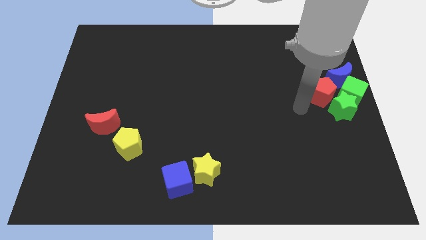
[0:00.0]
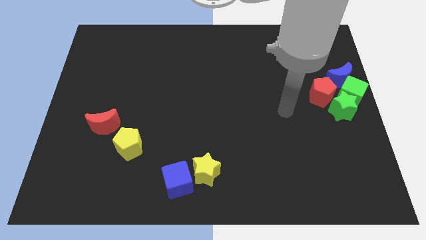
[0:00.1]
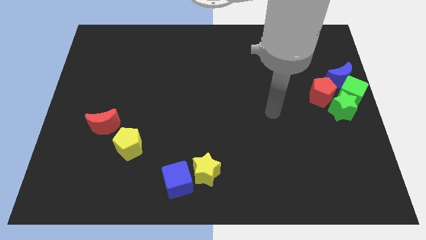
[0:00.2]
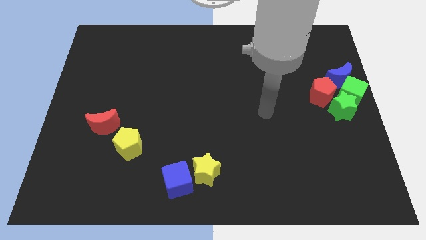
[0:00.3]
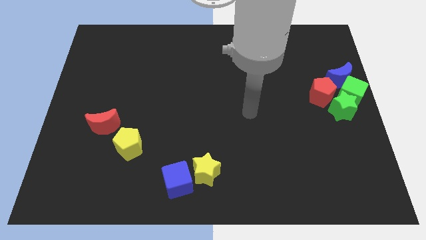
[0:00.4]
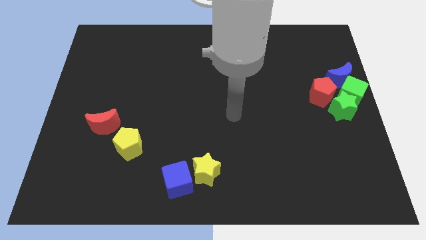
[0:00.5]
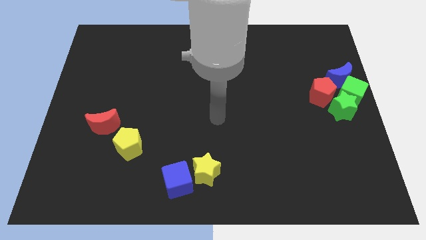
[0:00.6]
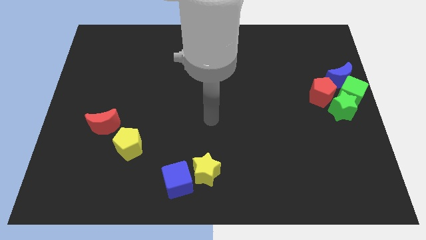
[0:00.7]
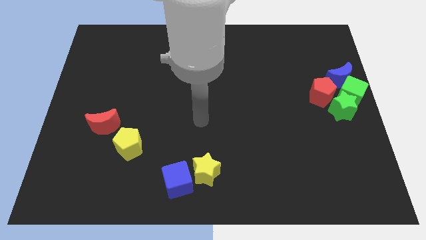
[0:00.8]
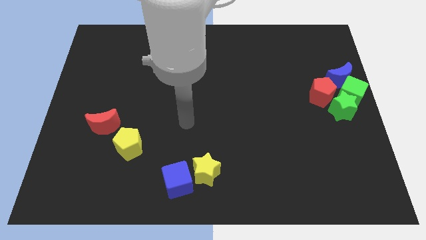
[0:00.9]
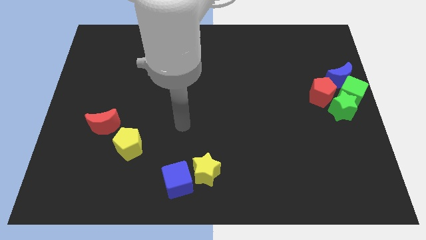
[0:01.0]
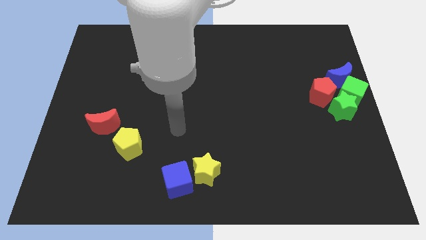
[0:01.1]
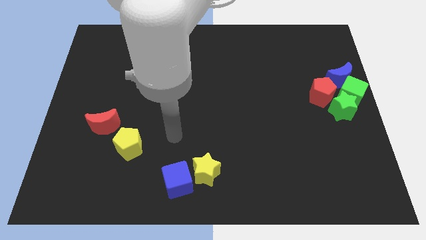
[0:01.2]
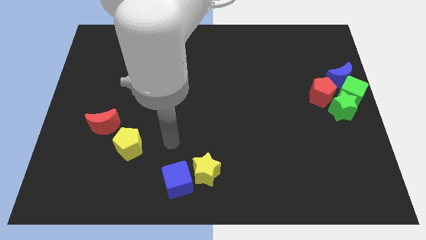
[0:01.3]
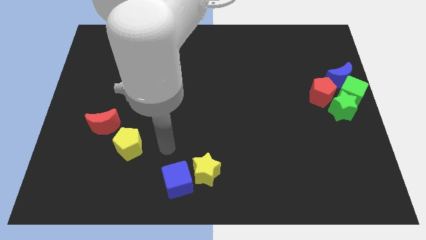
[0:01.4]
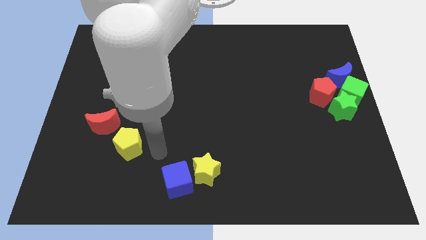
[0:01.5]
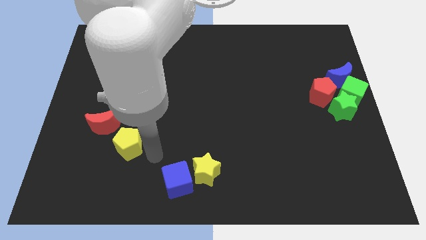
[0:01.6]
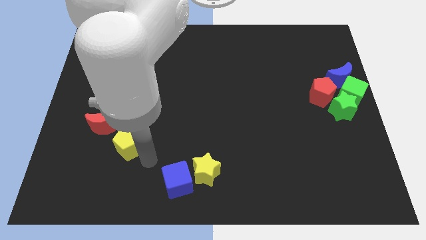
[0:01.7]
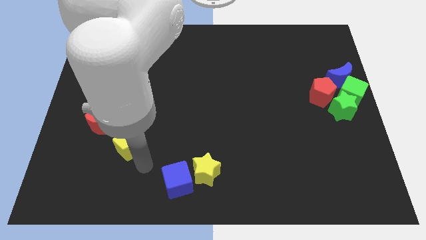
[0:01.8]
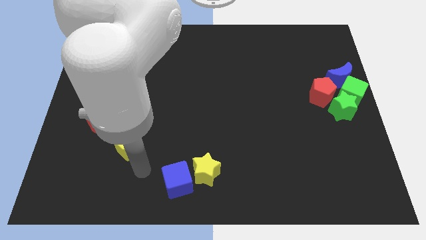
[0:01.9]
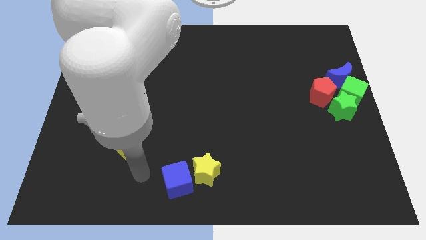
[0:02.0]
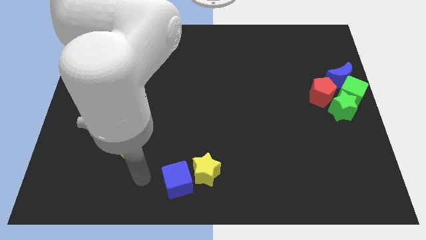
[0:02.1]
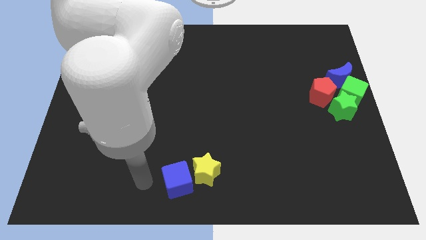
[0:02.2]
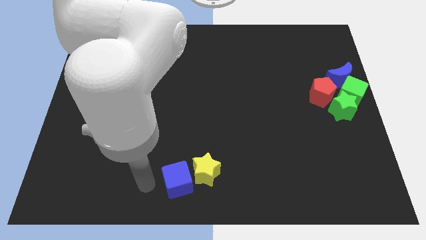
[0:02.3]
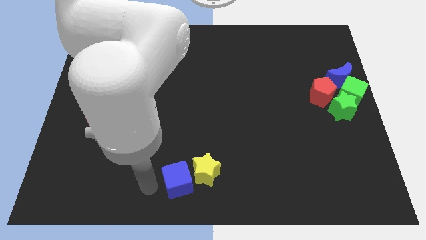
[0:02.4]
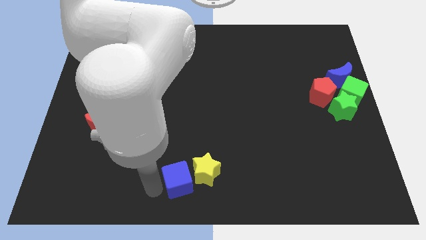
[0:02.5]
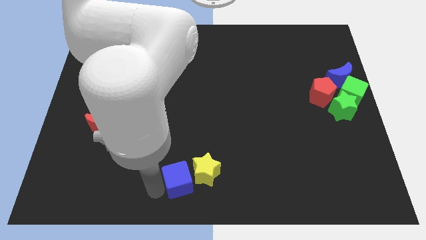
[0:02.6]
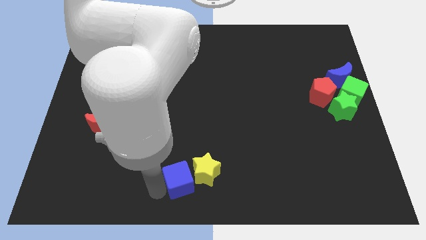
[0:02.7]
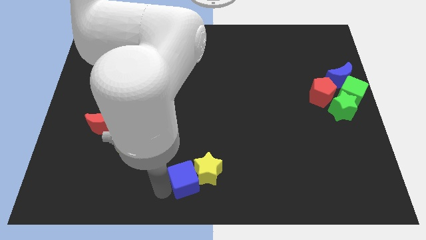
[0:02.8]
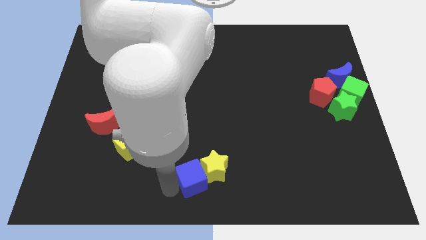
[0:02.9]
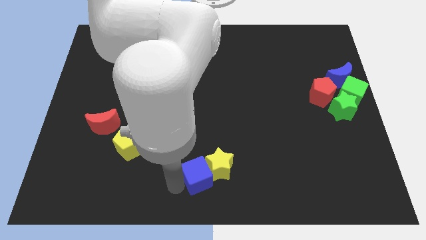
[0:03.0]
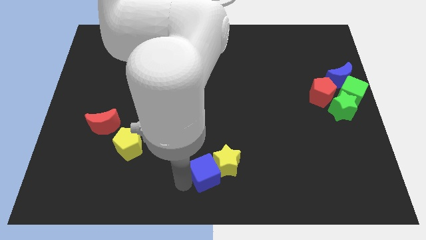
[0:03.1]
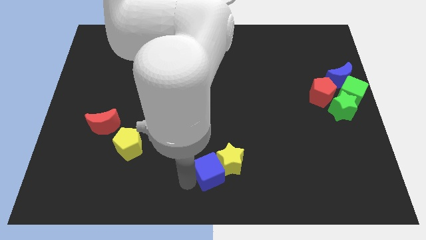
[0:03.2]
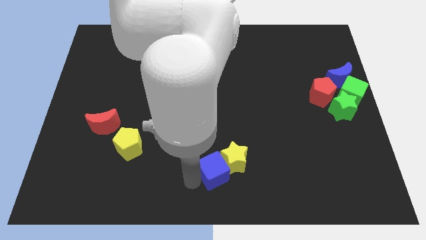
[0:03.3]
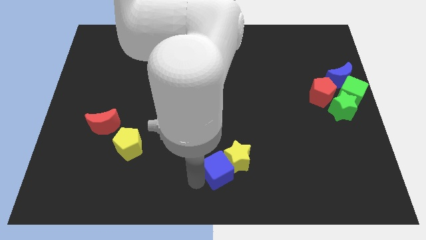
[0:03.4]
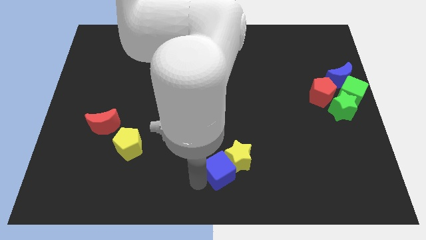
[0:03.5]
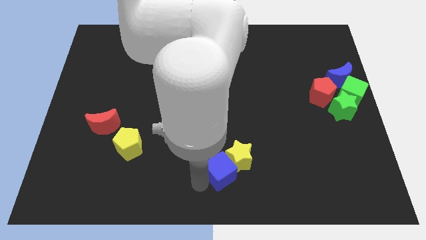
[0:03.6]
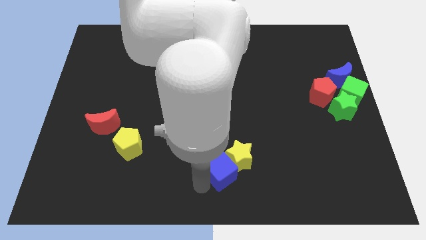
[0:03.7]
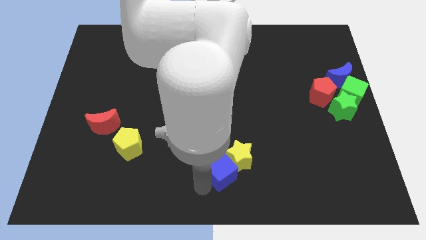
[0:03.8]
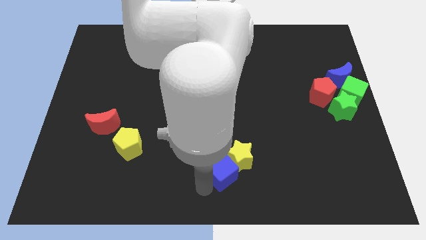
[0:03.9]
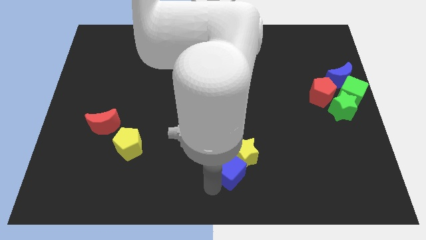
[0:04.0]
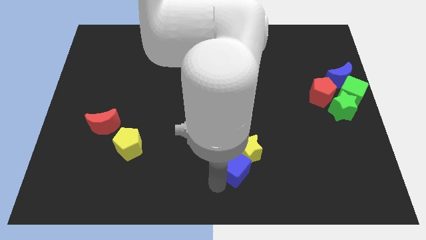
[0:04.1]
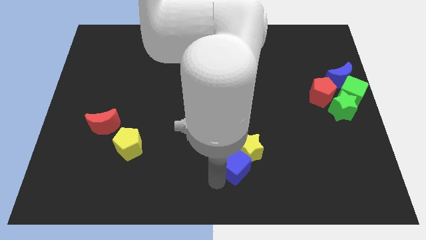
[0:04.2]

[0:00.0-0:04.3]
push the blue cube into the yellow star

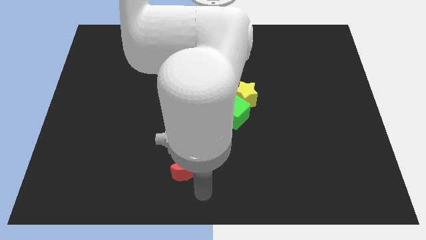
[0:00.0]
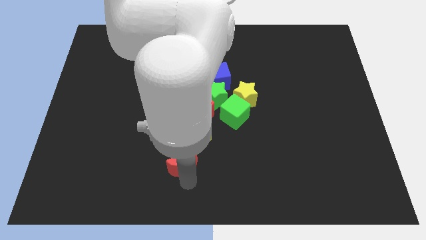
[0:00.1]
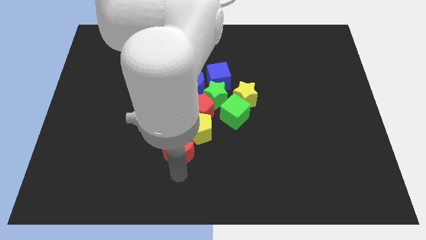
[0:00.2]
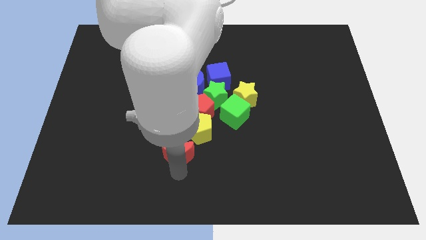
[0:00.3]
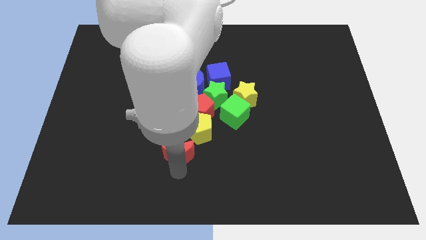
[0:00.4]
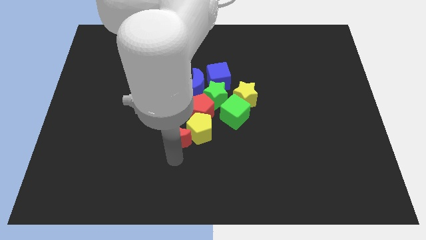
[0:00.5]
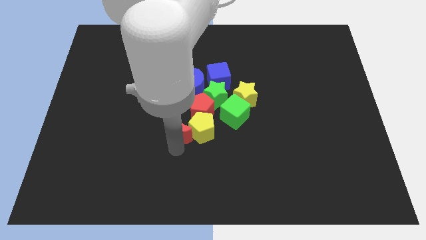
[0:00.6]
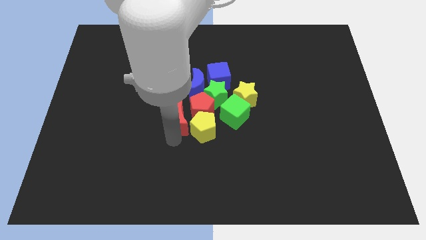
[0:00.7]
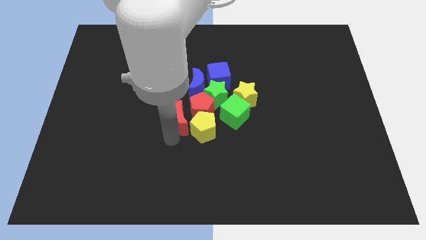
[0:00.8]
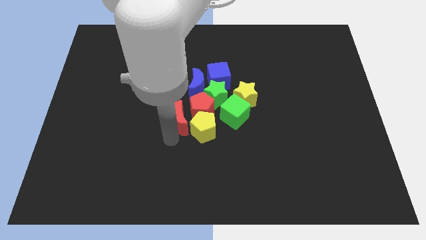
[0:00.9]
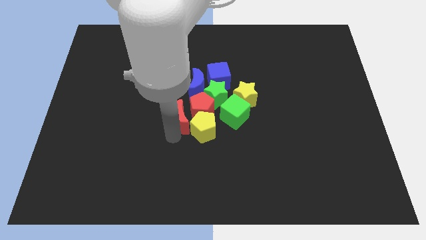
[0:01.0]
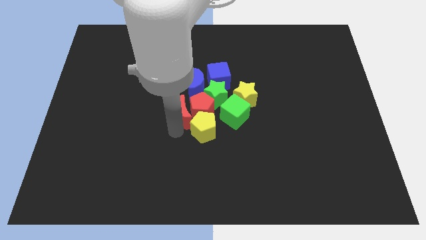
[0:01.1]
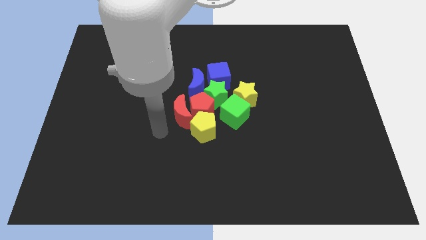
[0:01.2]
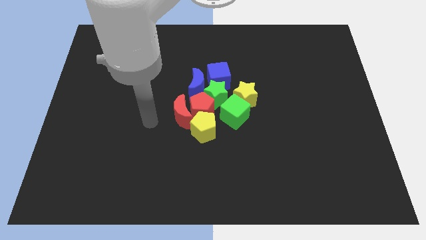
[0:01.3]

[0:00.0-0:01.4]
move the red moon into the group of objects

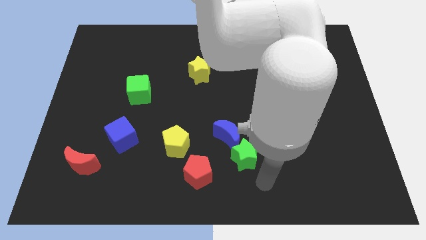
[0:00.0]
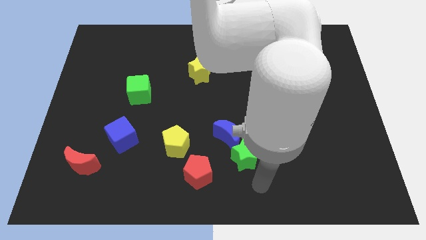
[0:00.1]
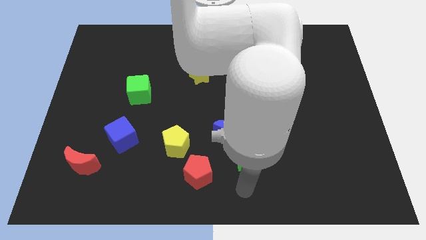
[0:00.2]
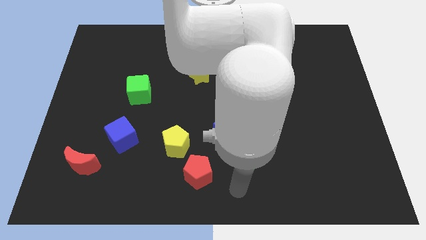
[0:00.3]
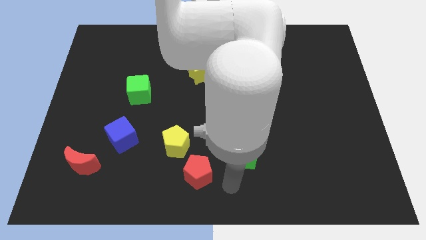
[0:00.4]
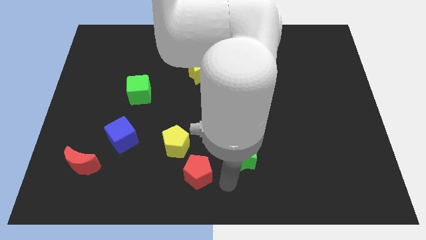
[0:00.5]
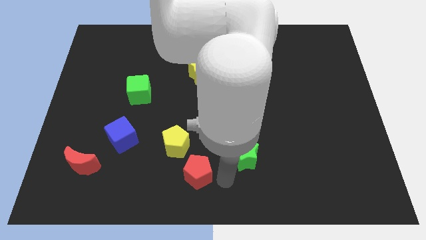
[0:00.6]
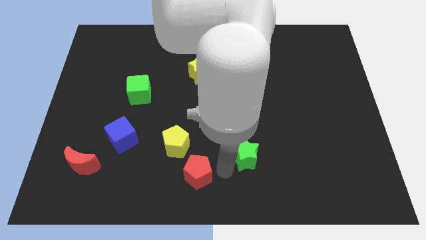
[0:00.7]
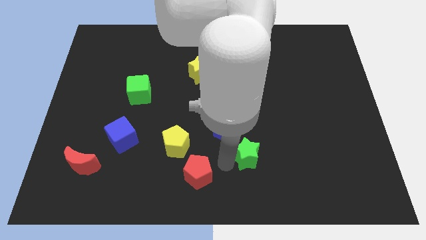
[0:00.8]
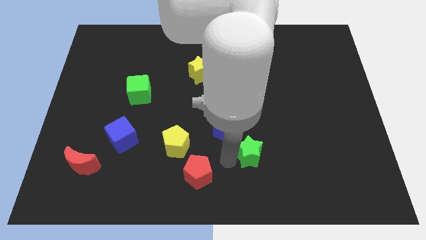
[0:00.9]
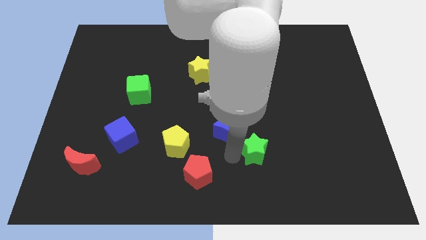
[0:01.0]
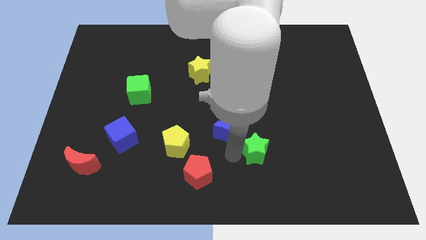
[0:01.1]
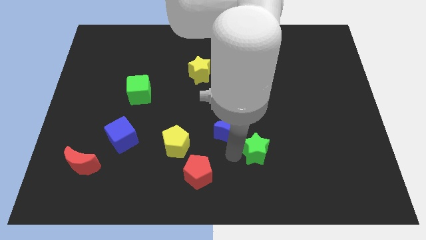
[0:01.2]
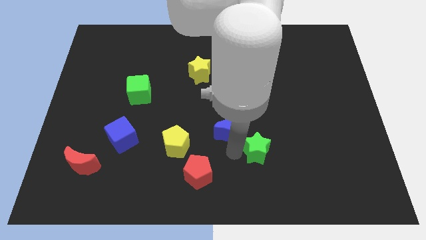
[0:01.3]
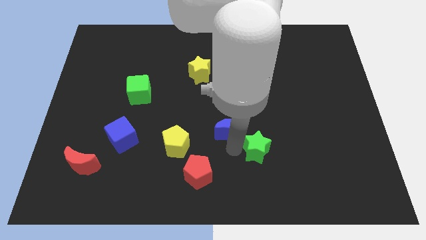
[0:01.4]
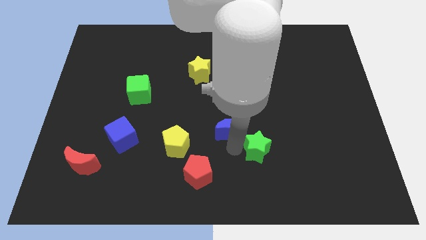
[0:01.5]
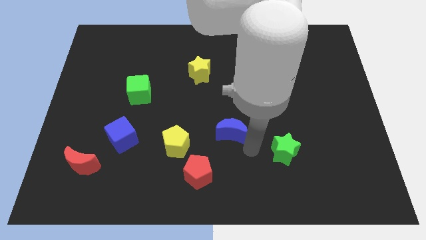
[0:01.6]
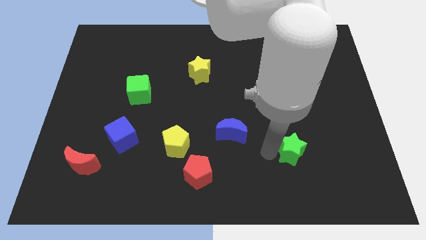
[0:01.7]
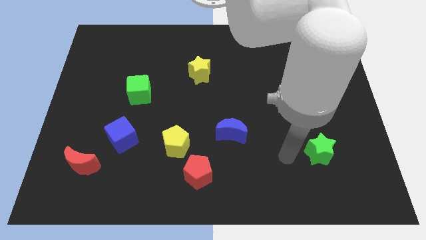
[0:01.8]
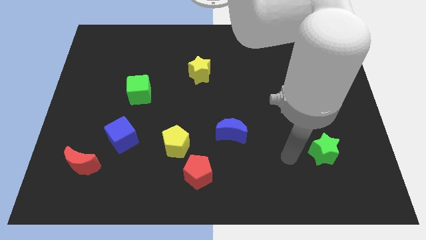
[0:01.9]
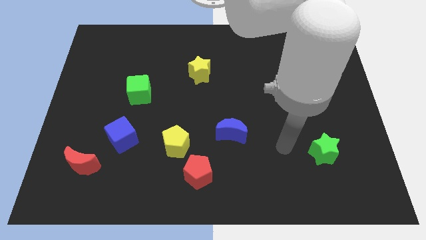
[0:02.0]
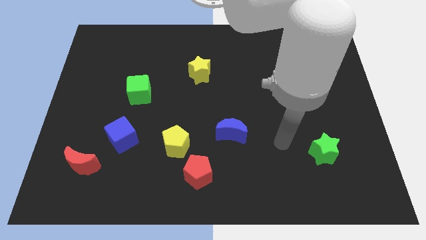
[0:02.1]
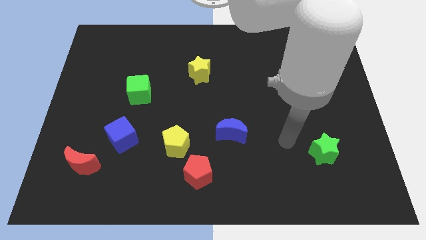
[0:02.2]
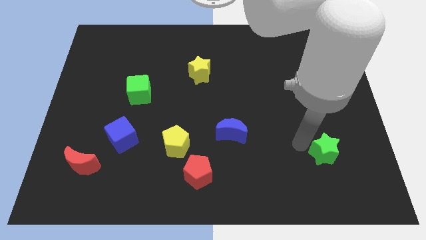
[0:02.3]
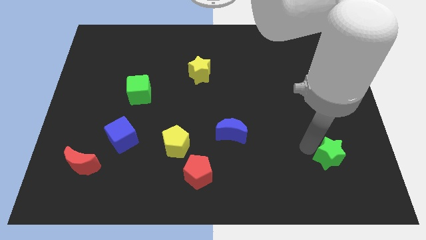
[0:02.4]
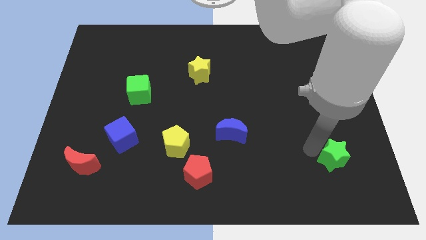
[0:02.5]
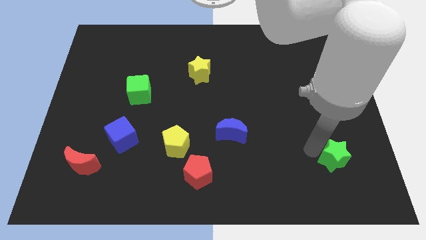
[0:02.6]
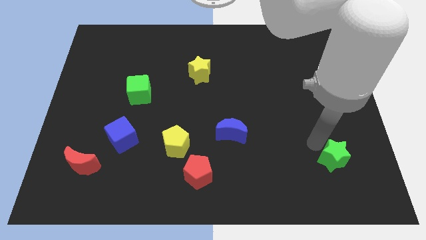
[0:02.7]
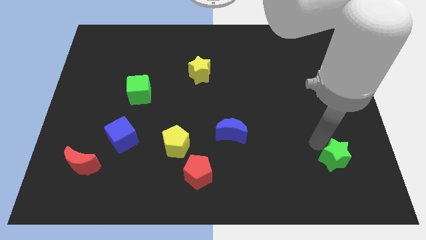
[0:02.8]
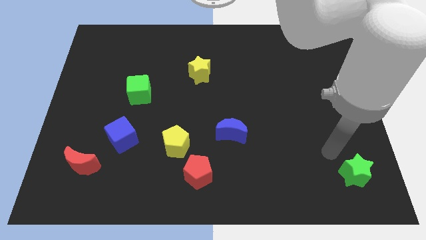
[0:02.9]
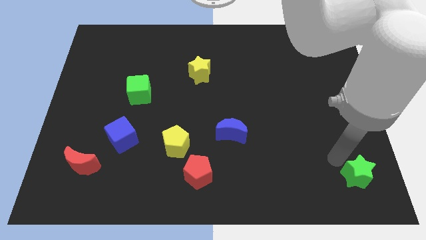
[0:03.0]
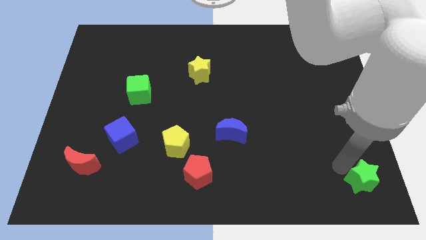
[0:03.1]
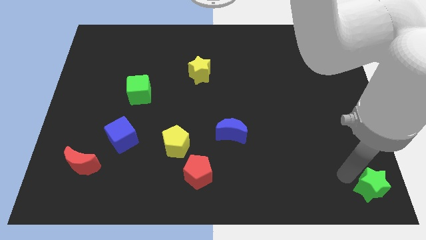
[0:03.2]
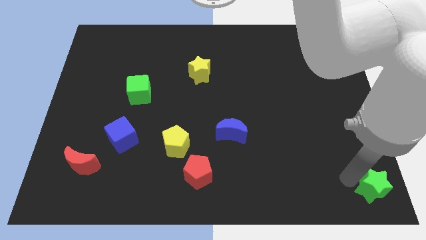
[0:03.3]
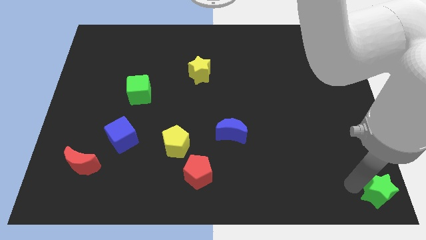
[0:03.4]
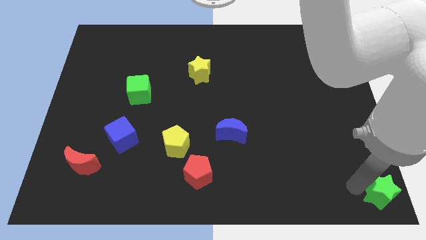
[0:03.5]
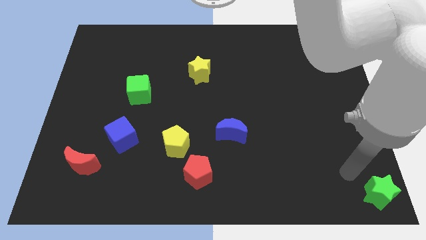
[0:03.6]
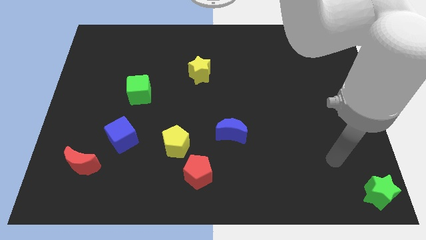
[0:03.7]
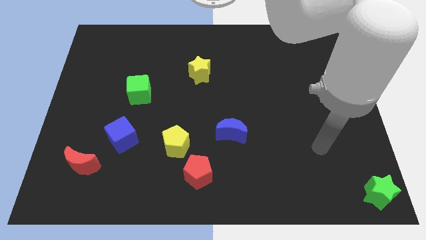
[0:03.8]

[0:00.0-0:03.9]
move green star towards bottom right of the board
